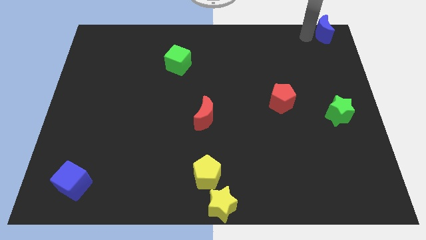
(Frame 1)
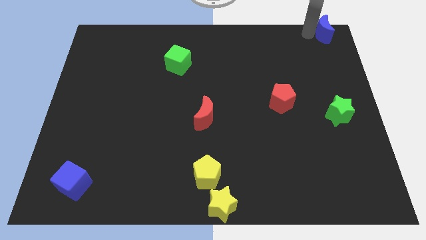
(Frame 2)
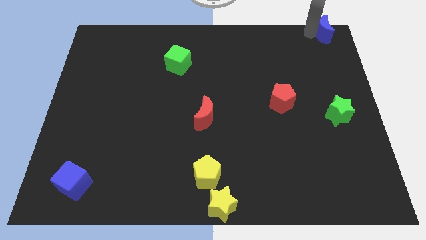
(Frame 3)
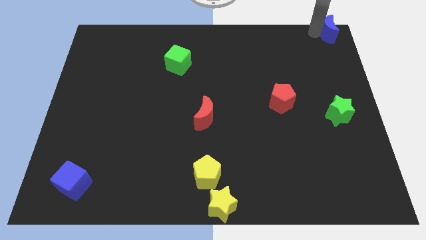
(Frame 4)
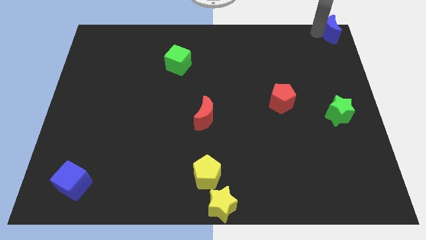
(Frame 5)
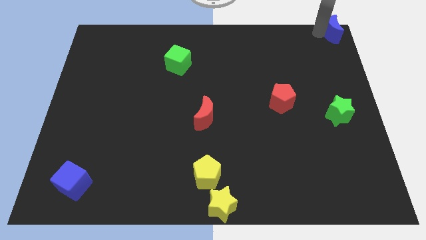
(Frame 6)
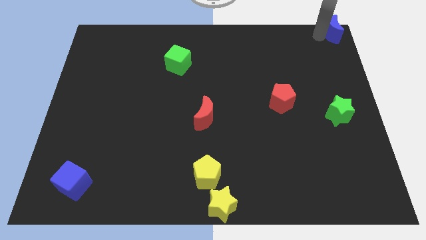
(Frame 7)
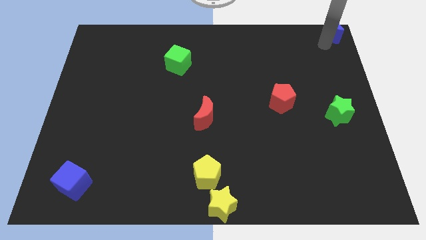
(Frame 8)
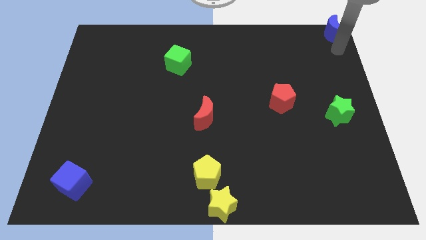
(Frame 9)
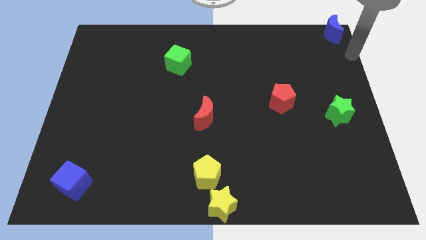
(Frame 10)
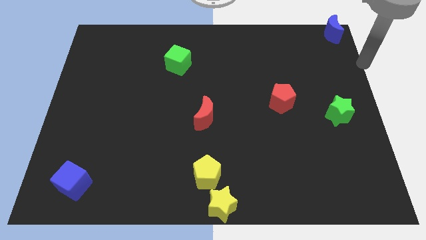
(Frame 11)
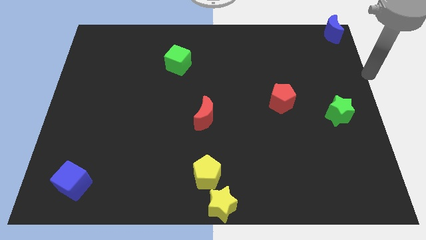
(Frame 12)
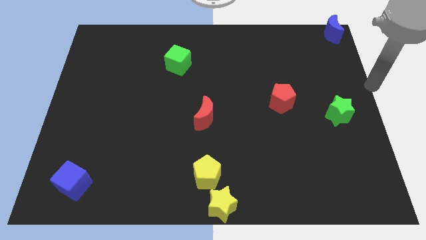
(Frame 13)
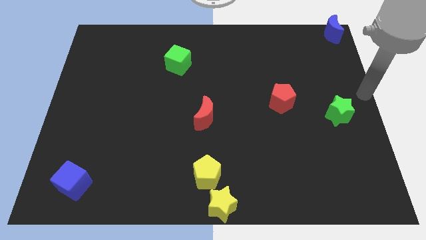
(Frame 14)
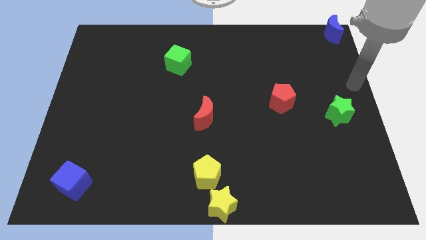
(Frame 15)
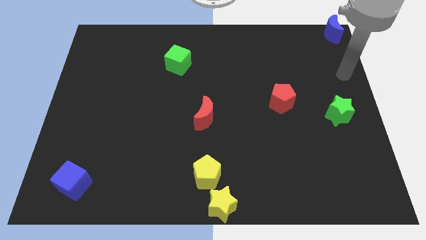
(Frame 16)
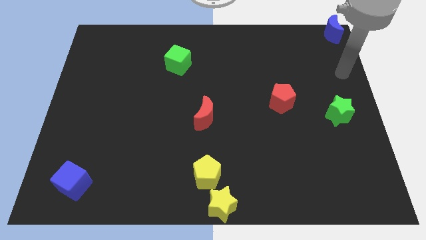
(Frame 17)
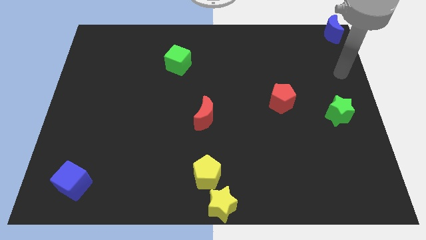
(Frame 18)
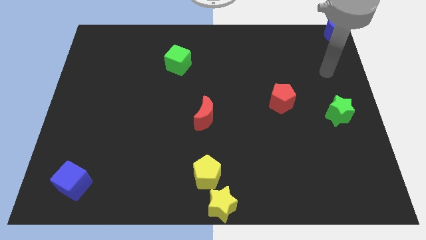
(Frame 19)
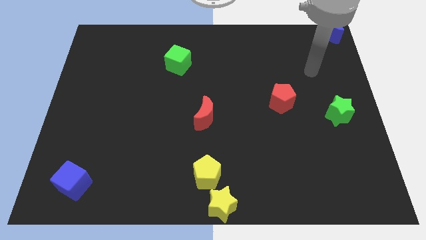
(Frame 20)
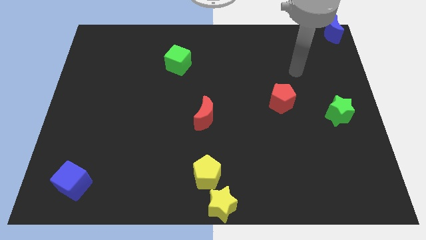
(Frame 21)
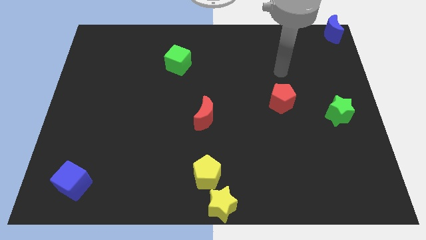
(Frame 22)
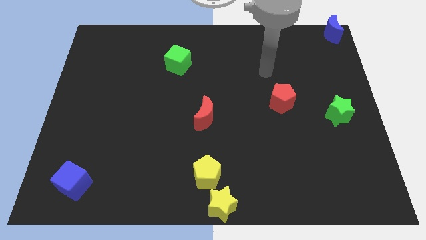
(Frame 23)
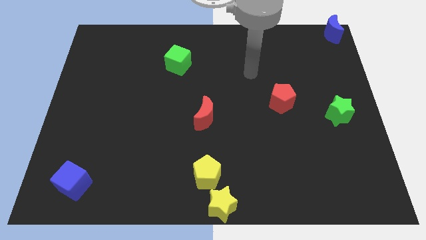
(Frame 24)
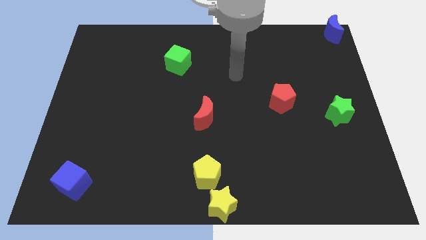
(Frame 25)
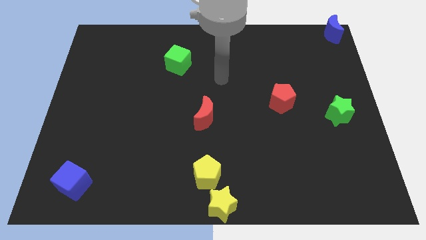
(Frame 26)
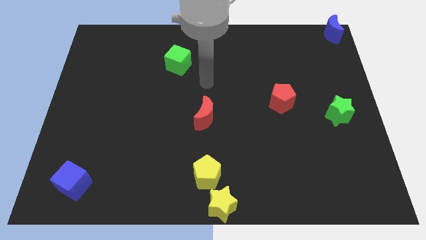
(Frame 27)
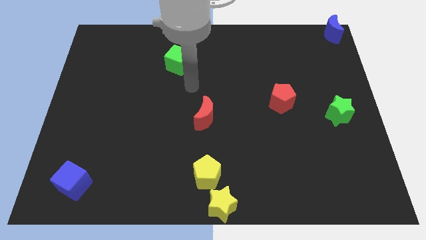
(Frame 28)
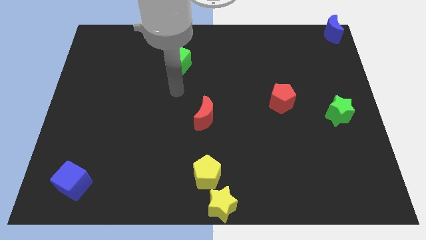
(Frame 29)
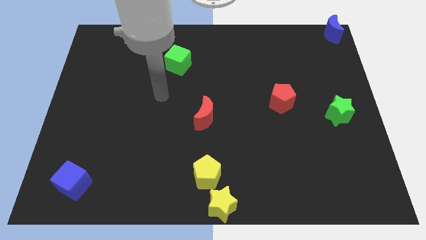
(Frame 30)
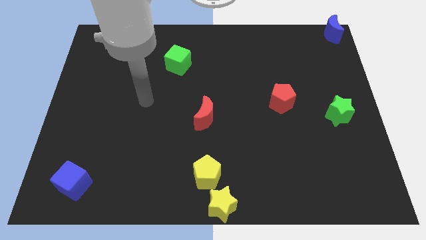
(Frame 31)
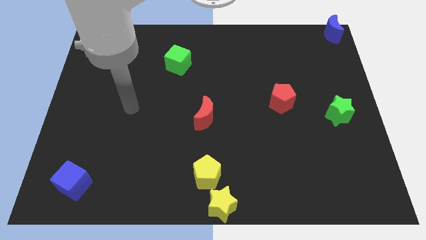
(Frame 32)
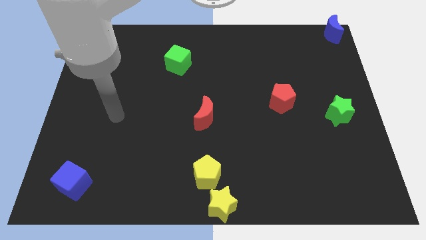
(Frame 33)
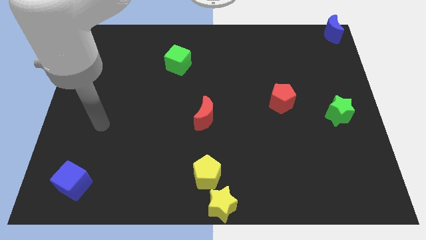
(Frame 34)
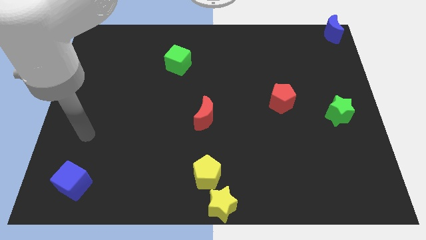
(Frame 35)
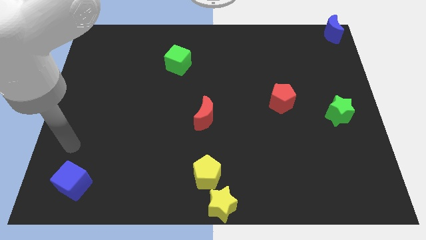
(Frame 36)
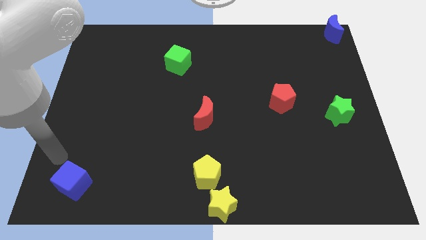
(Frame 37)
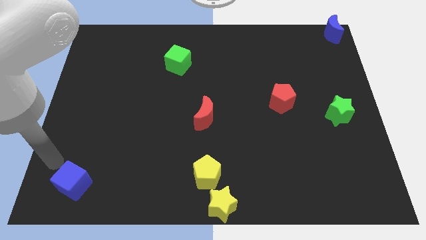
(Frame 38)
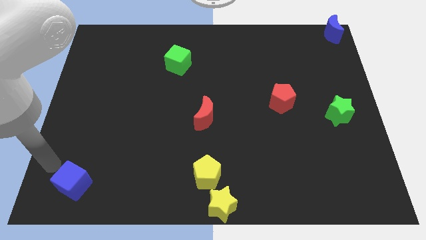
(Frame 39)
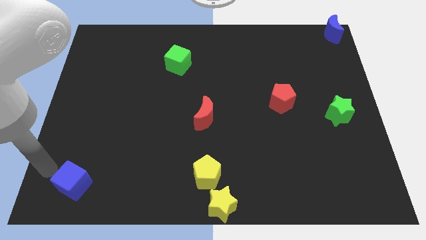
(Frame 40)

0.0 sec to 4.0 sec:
move your arm away from the blue moon

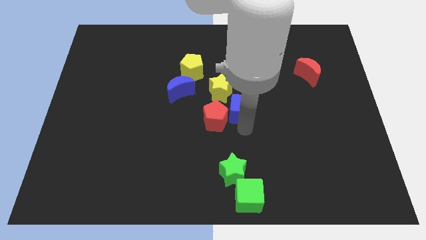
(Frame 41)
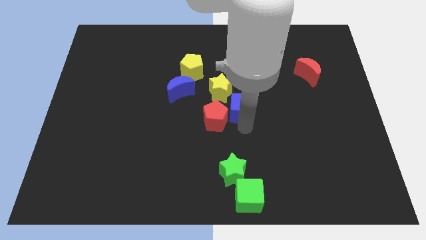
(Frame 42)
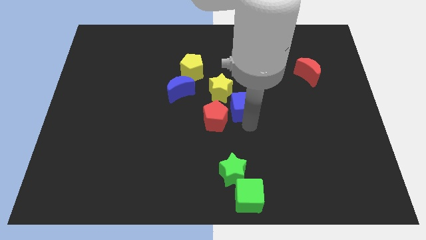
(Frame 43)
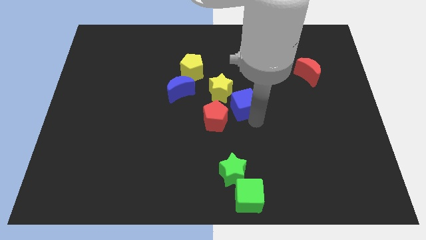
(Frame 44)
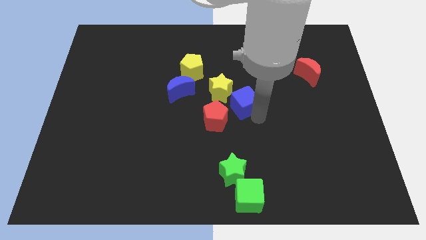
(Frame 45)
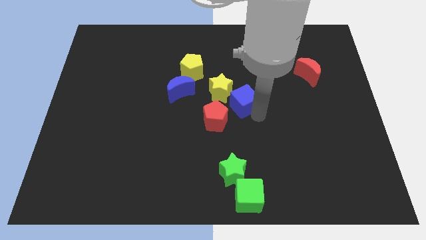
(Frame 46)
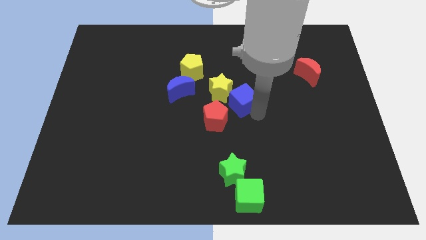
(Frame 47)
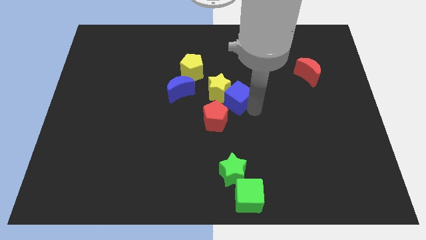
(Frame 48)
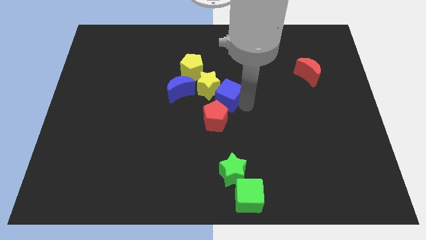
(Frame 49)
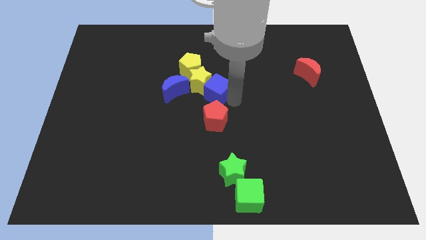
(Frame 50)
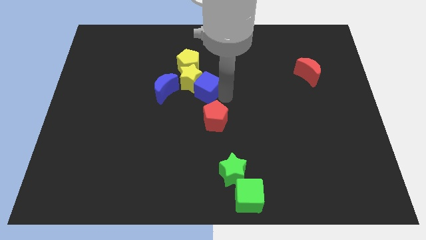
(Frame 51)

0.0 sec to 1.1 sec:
push the blue cube into yellow star

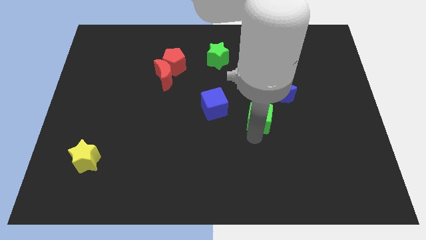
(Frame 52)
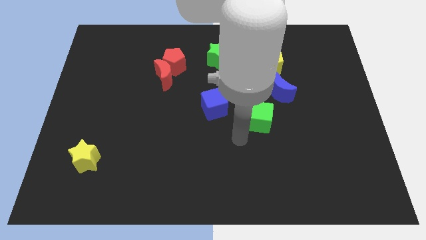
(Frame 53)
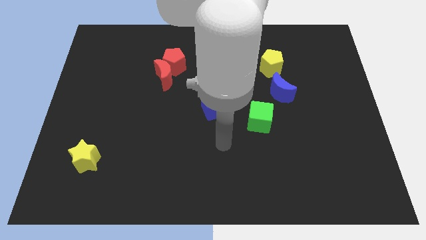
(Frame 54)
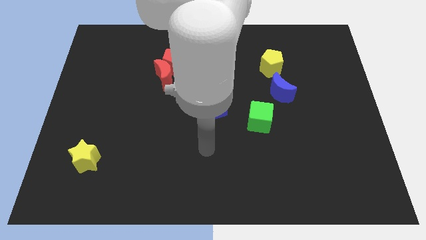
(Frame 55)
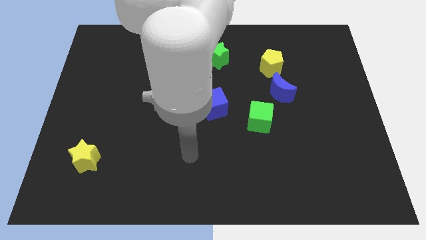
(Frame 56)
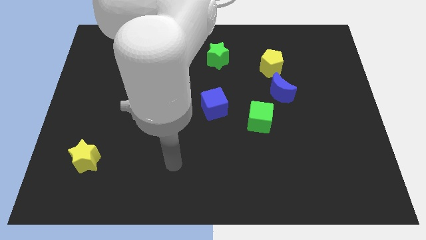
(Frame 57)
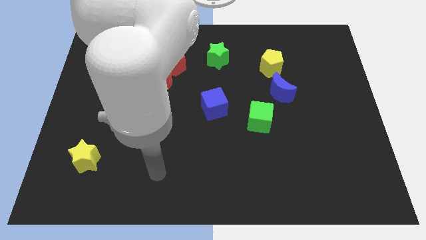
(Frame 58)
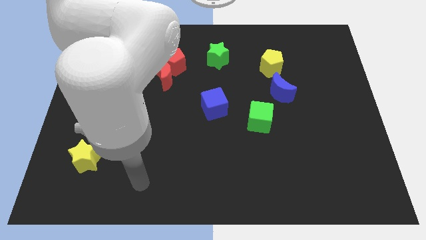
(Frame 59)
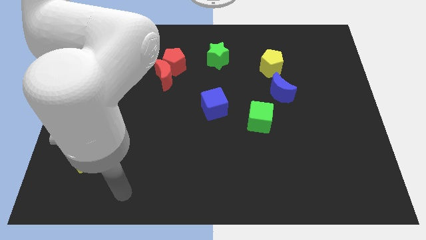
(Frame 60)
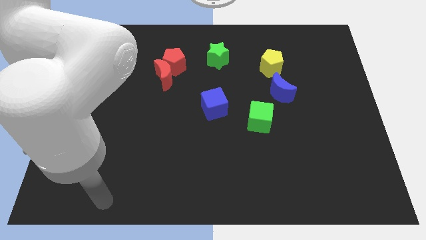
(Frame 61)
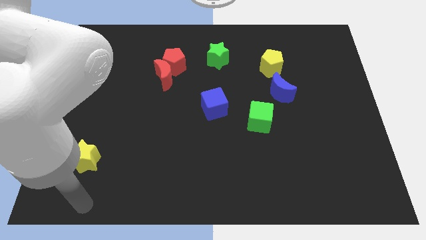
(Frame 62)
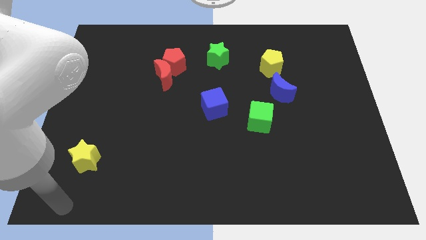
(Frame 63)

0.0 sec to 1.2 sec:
move your arm towards the bottom left corner of the board

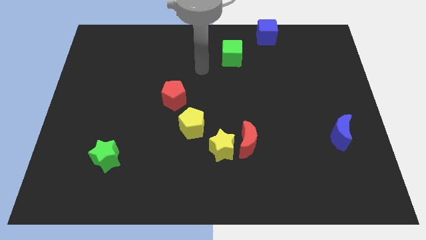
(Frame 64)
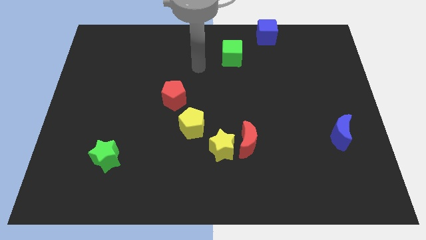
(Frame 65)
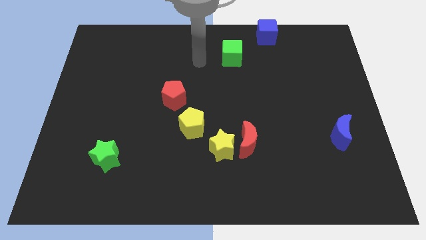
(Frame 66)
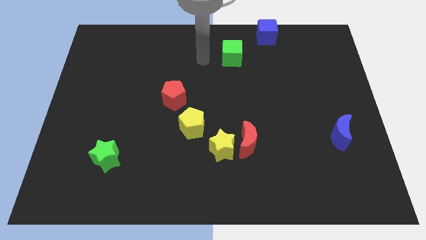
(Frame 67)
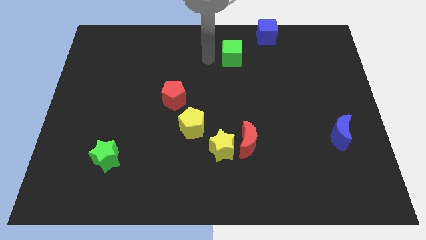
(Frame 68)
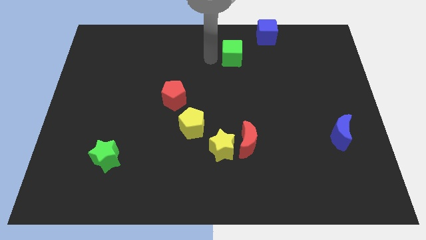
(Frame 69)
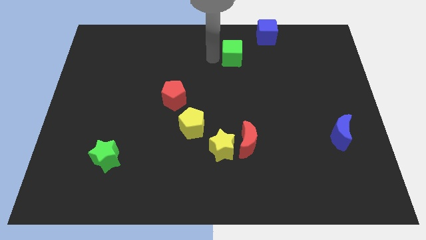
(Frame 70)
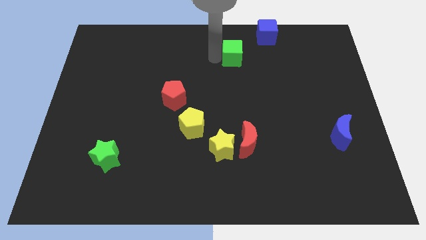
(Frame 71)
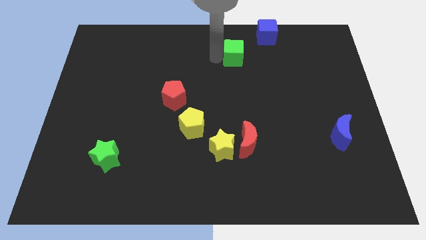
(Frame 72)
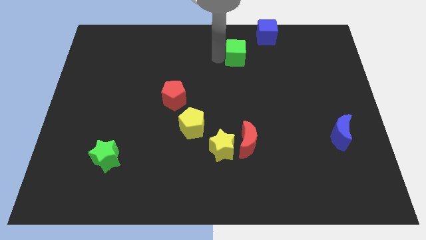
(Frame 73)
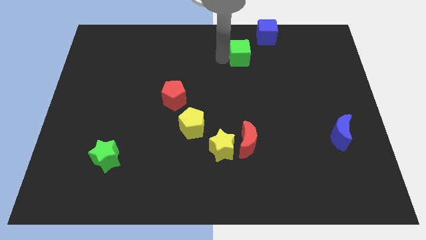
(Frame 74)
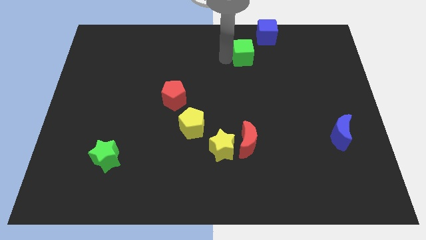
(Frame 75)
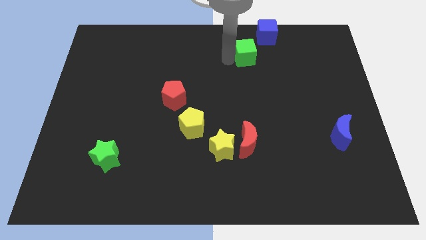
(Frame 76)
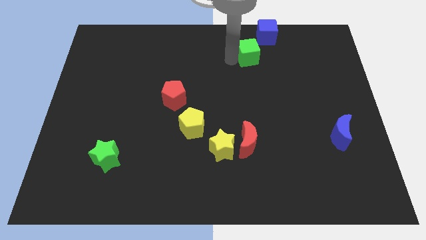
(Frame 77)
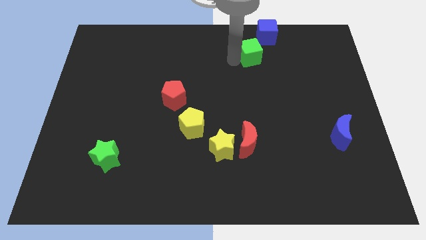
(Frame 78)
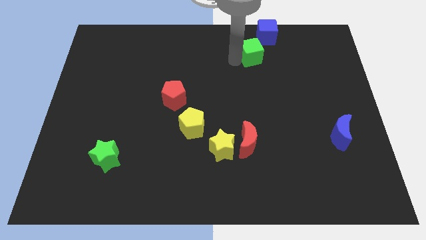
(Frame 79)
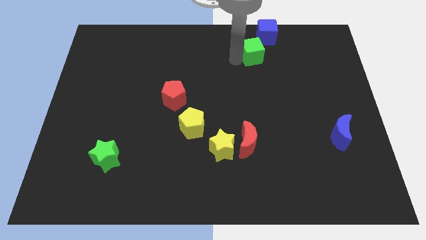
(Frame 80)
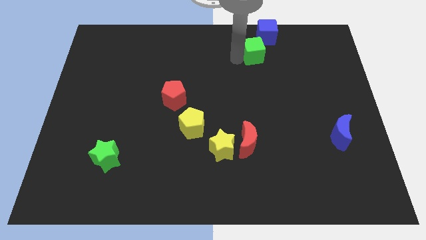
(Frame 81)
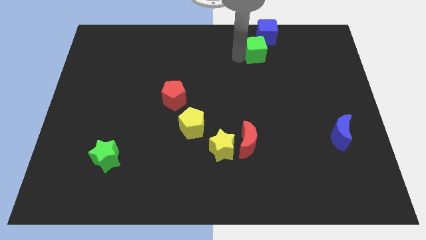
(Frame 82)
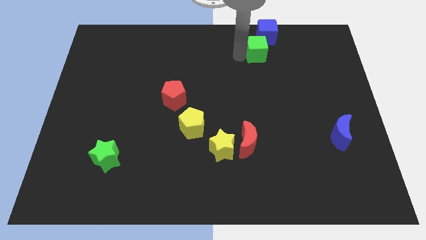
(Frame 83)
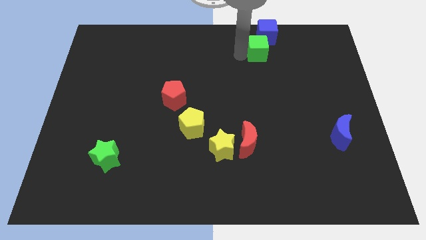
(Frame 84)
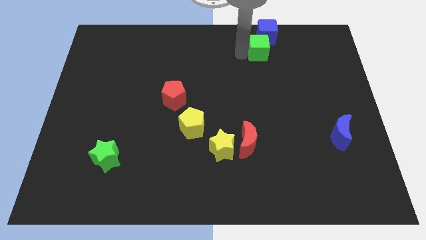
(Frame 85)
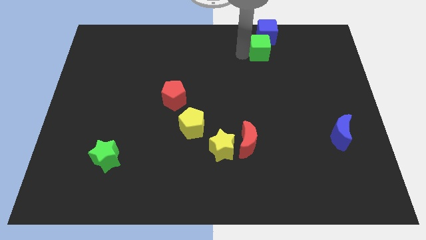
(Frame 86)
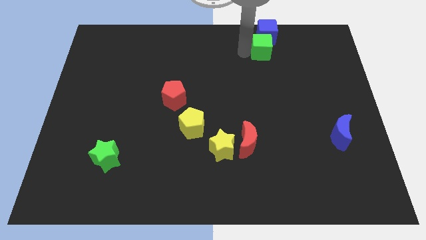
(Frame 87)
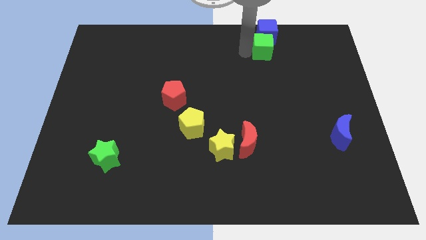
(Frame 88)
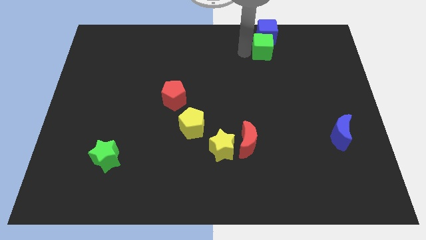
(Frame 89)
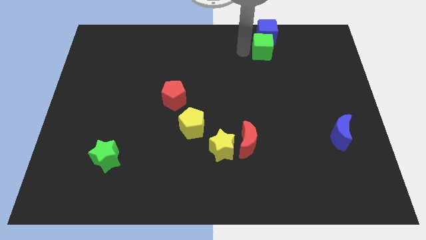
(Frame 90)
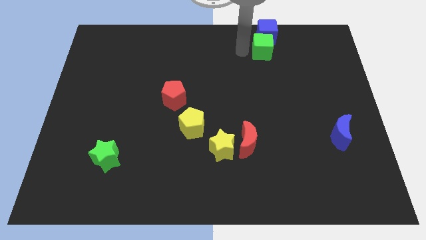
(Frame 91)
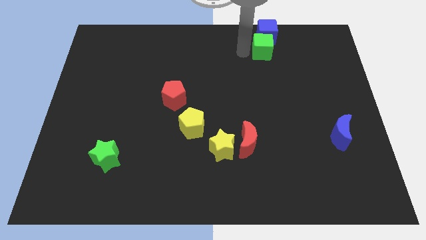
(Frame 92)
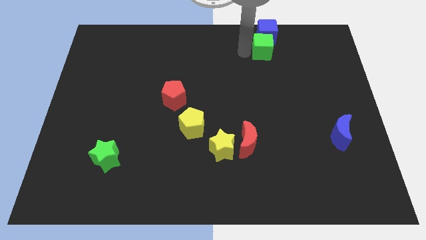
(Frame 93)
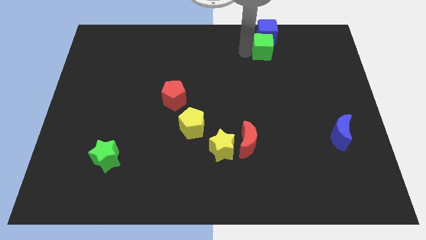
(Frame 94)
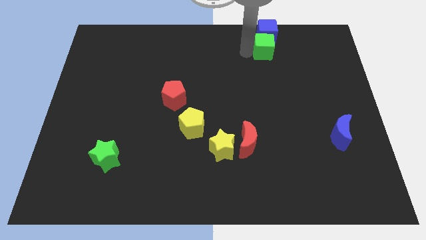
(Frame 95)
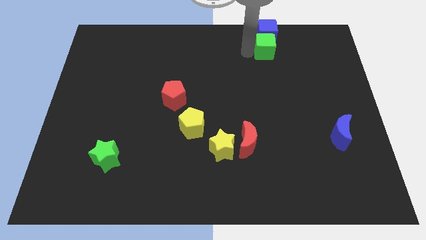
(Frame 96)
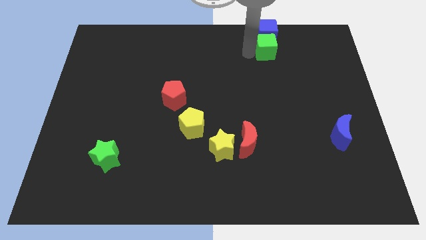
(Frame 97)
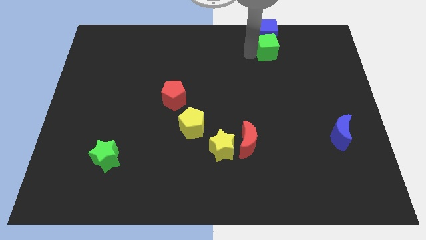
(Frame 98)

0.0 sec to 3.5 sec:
place the green cube at the bottom of the blue cube
